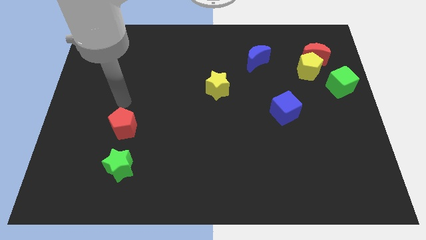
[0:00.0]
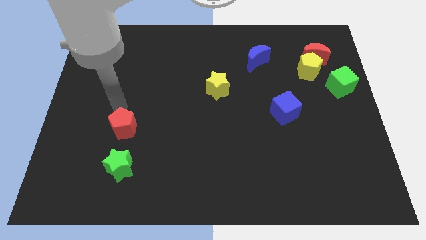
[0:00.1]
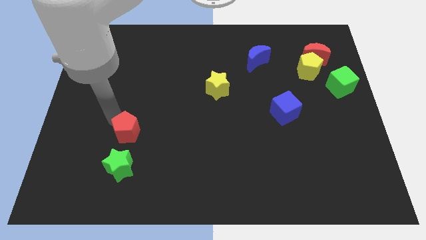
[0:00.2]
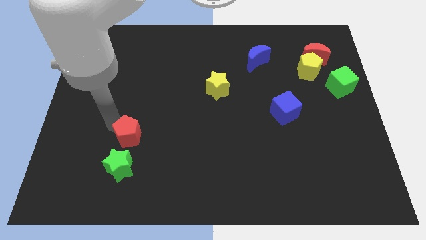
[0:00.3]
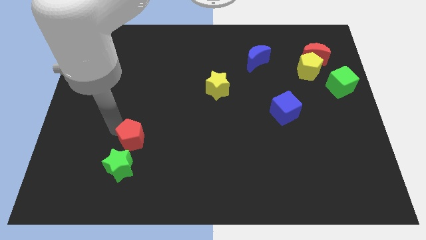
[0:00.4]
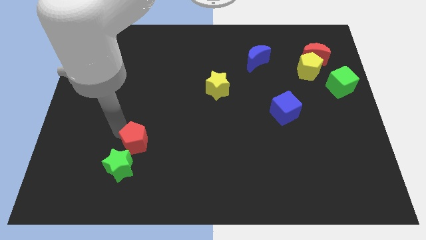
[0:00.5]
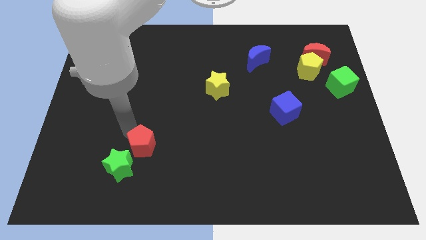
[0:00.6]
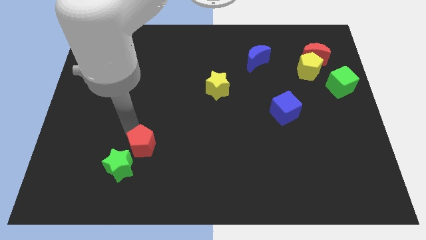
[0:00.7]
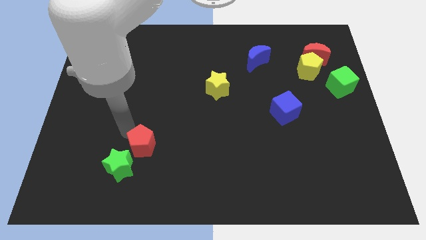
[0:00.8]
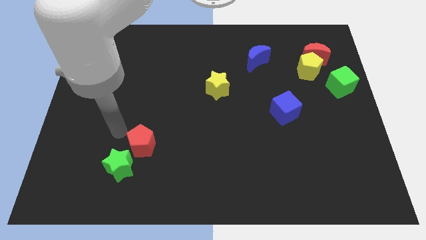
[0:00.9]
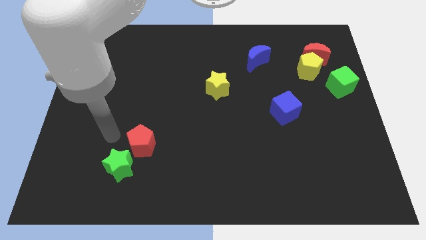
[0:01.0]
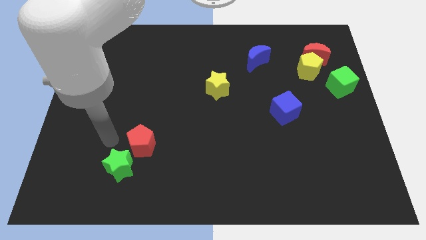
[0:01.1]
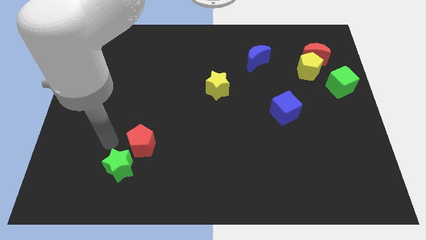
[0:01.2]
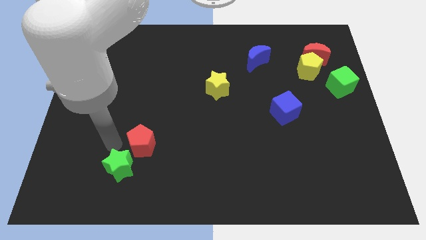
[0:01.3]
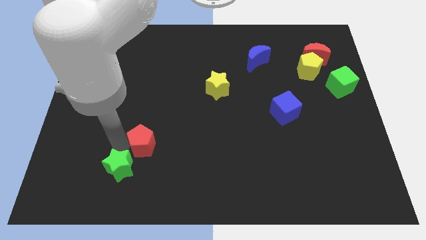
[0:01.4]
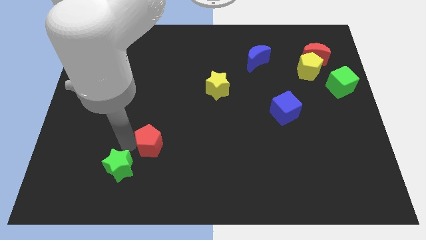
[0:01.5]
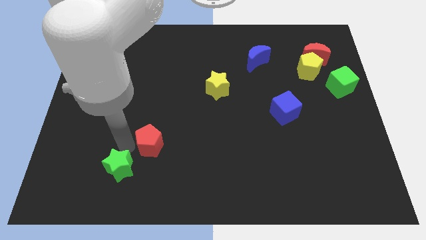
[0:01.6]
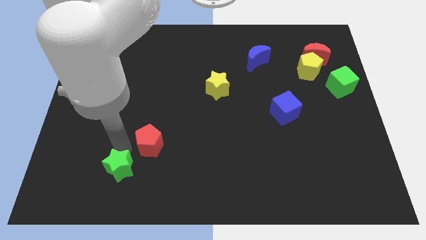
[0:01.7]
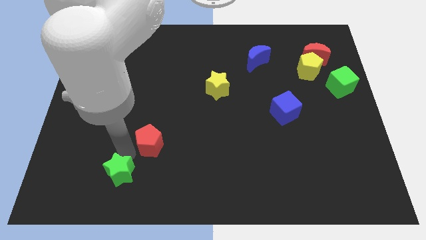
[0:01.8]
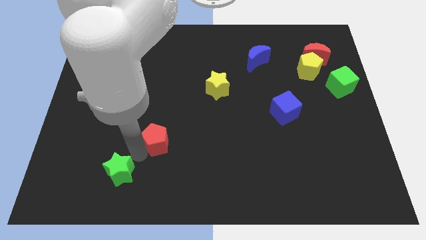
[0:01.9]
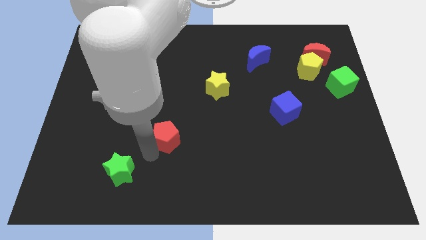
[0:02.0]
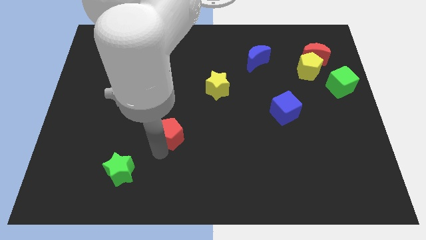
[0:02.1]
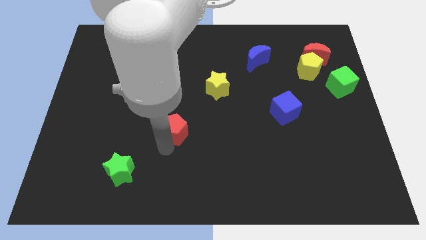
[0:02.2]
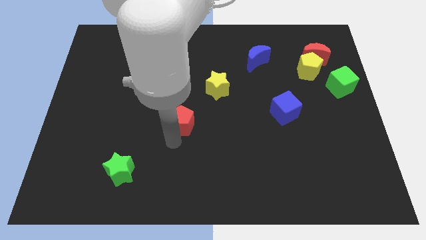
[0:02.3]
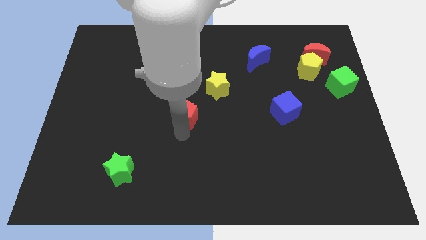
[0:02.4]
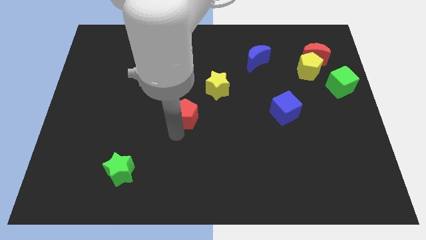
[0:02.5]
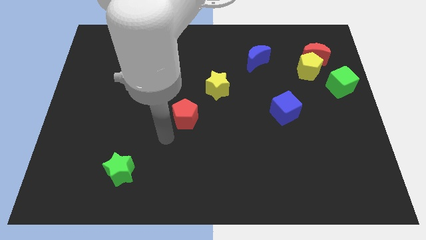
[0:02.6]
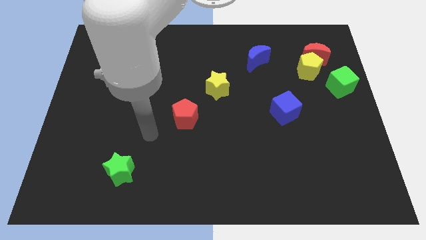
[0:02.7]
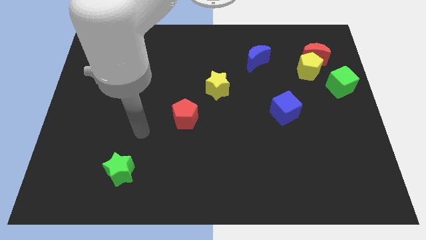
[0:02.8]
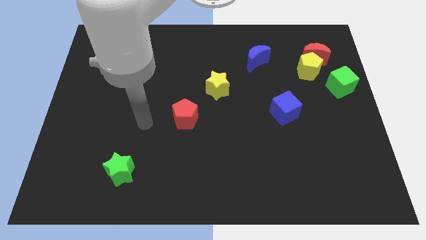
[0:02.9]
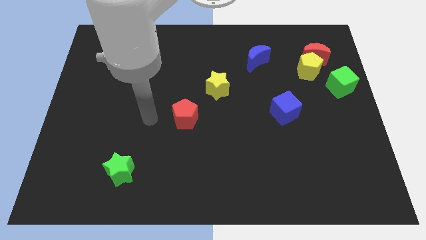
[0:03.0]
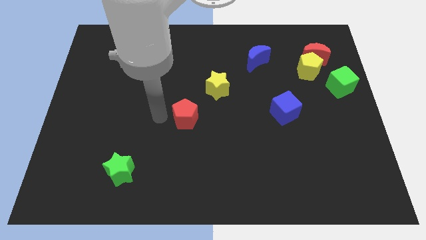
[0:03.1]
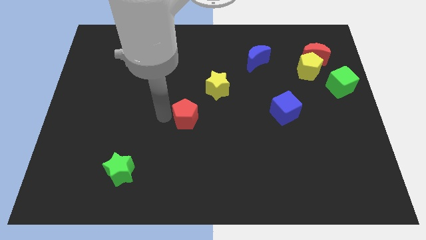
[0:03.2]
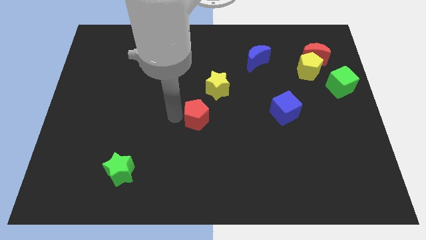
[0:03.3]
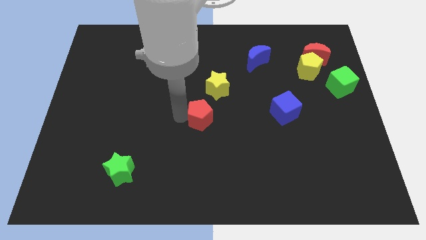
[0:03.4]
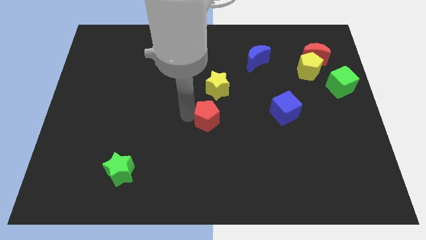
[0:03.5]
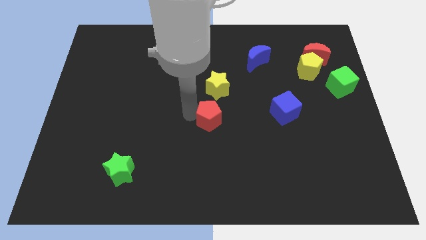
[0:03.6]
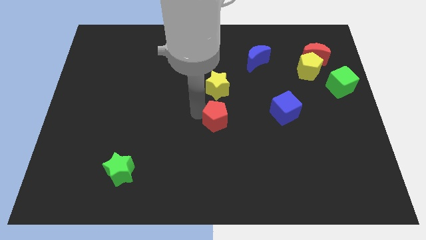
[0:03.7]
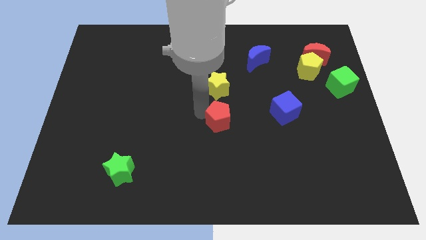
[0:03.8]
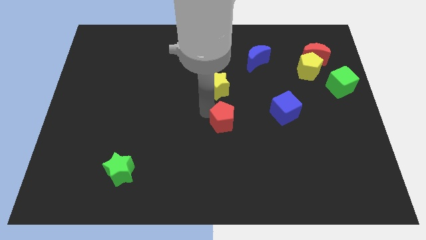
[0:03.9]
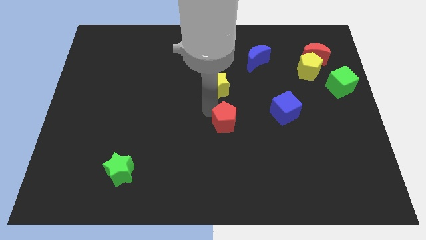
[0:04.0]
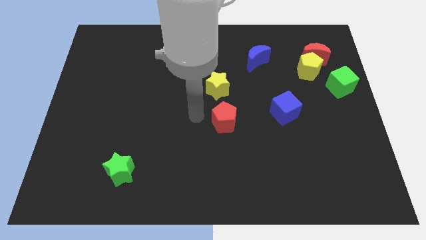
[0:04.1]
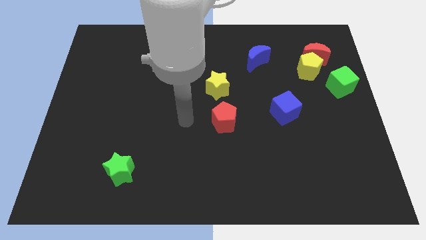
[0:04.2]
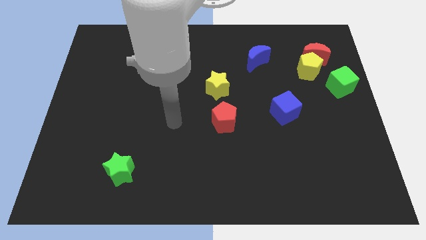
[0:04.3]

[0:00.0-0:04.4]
place the red pentagon below the yellow star

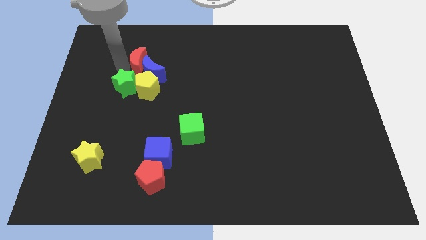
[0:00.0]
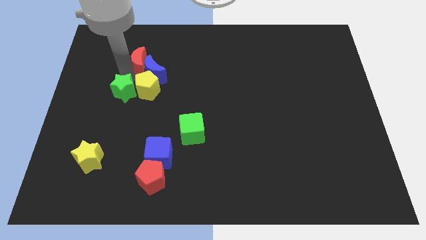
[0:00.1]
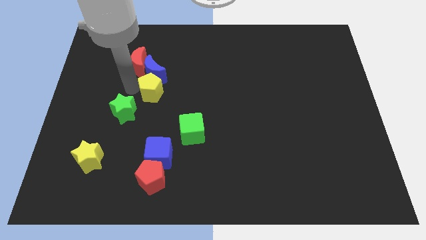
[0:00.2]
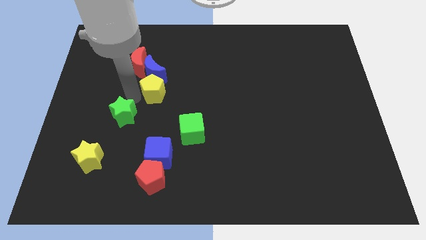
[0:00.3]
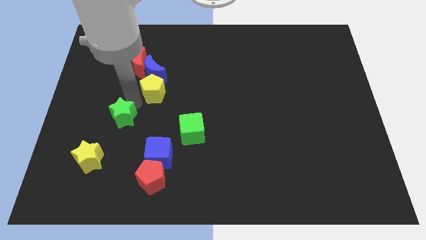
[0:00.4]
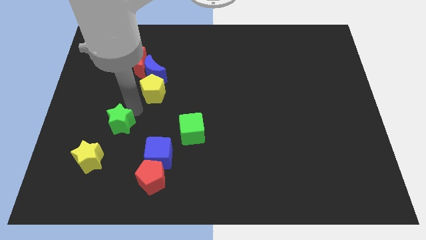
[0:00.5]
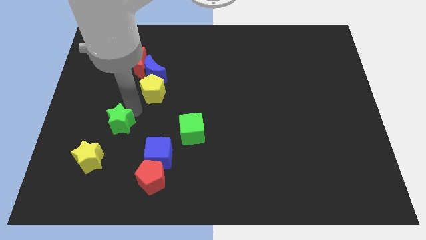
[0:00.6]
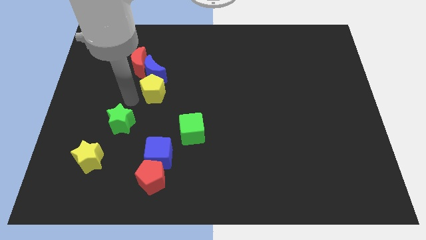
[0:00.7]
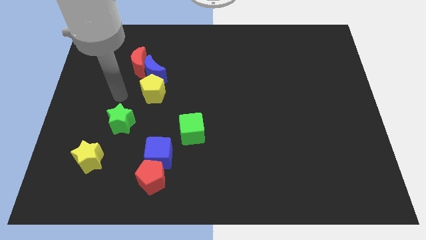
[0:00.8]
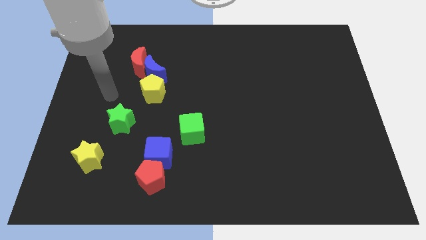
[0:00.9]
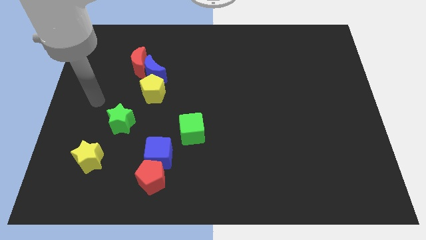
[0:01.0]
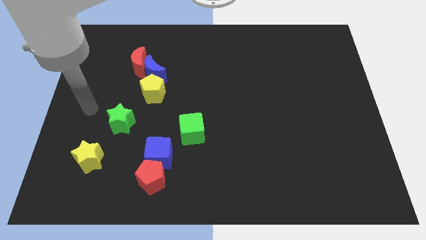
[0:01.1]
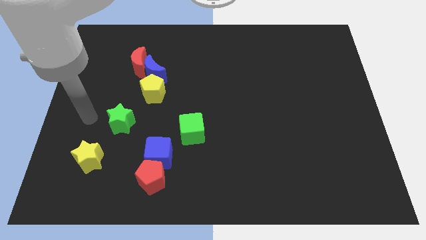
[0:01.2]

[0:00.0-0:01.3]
separate green star and the yellow pentagon

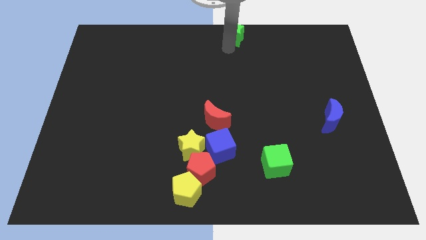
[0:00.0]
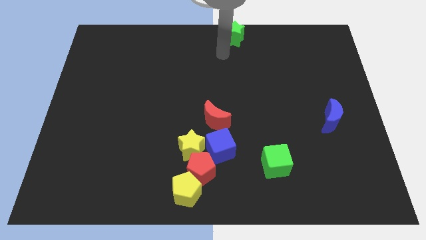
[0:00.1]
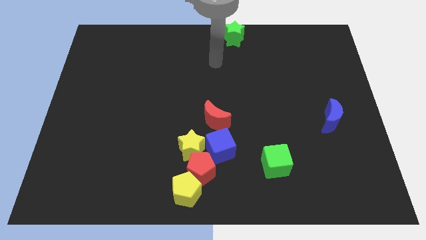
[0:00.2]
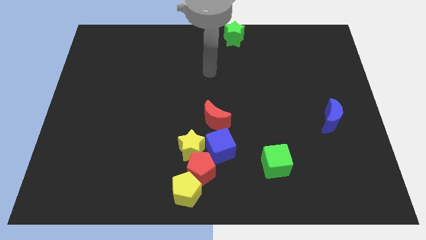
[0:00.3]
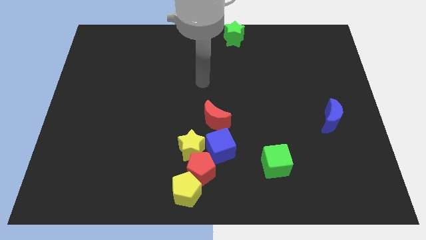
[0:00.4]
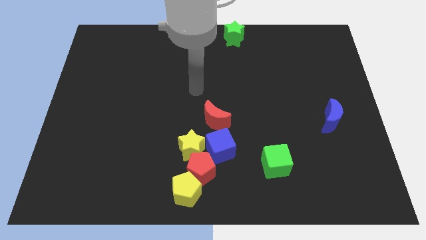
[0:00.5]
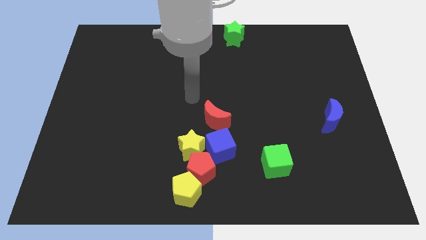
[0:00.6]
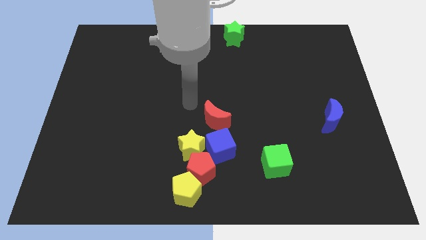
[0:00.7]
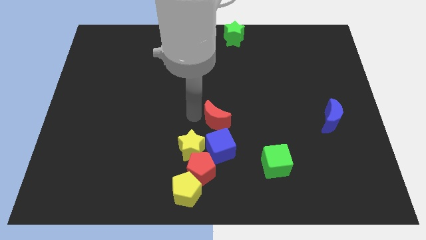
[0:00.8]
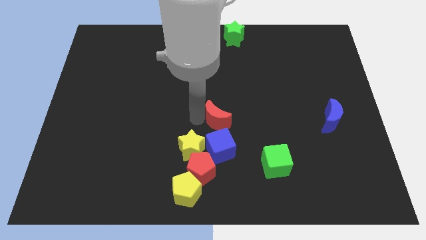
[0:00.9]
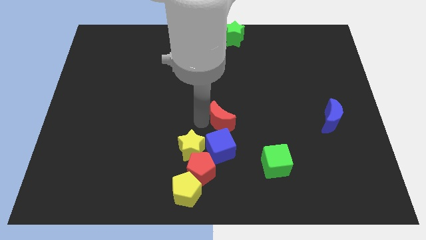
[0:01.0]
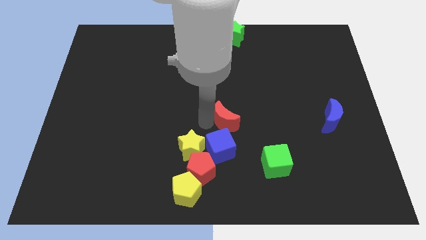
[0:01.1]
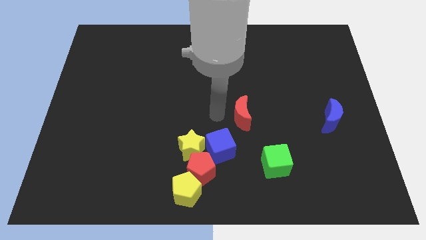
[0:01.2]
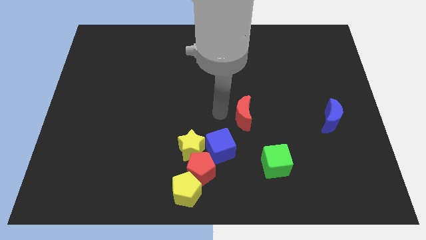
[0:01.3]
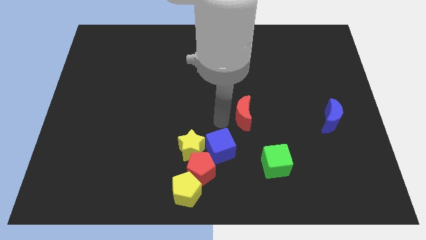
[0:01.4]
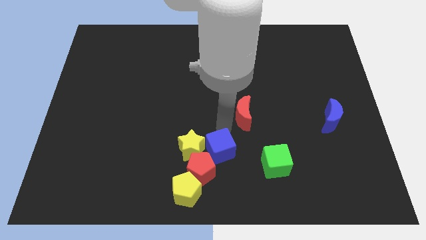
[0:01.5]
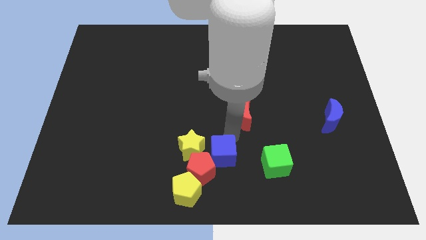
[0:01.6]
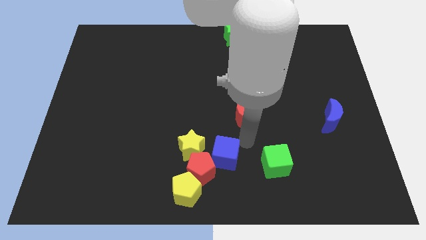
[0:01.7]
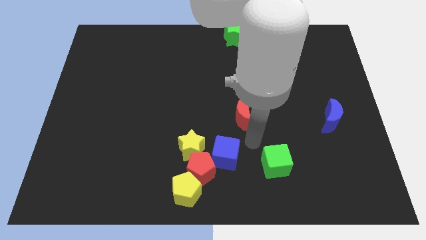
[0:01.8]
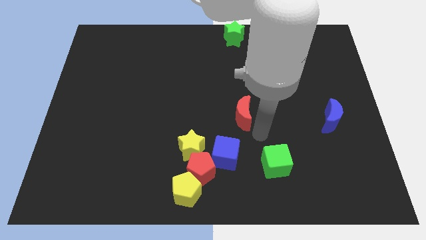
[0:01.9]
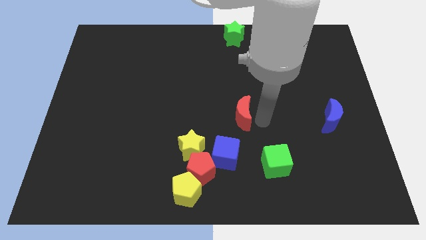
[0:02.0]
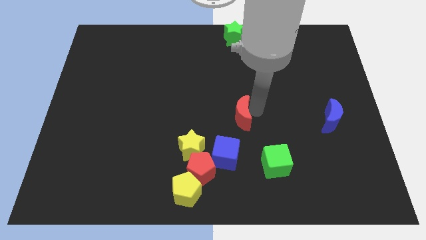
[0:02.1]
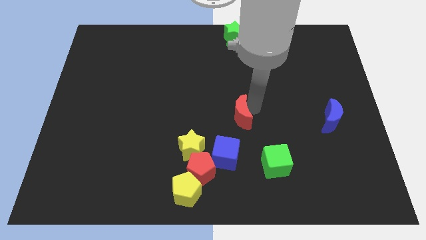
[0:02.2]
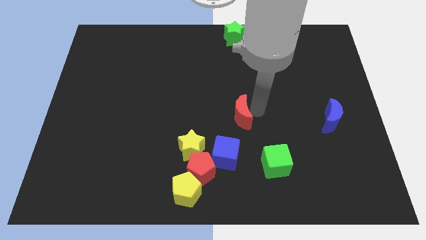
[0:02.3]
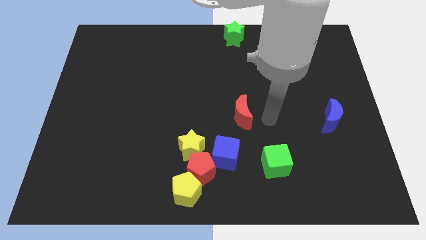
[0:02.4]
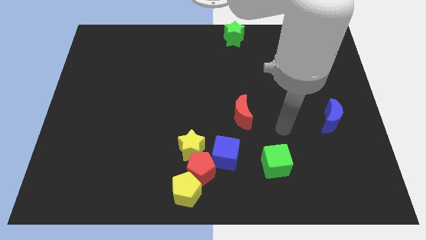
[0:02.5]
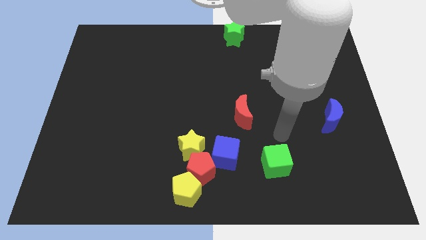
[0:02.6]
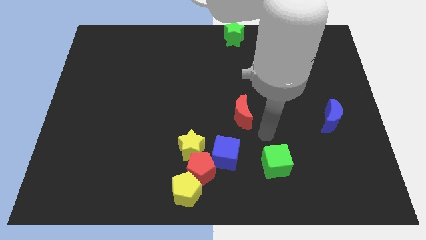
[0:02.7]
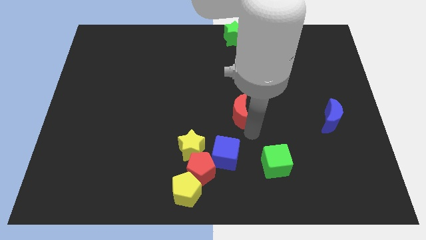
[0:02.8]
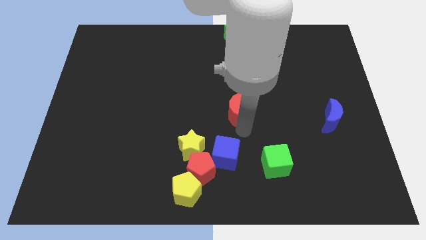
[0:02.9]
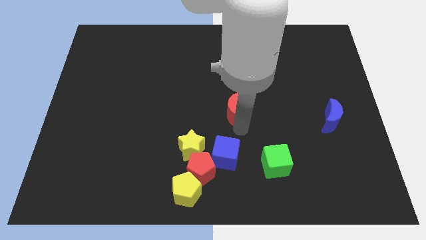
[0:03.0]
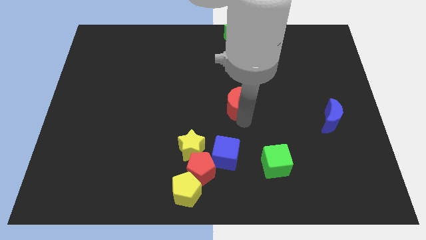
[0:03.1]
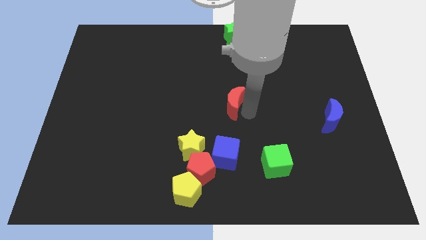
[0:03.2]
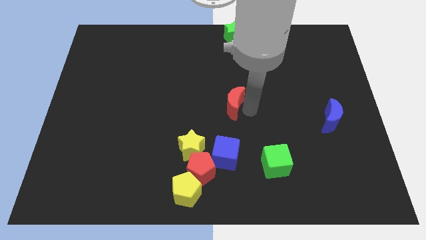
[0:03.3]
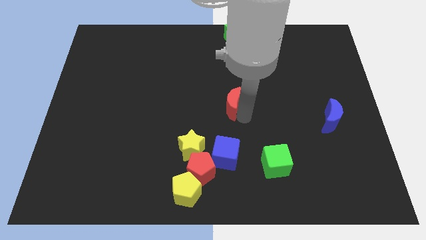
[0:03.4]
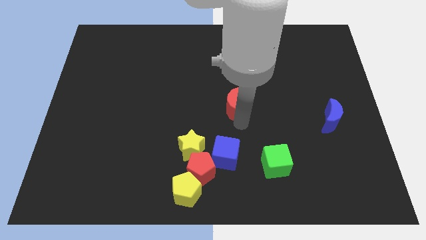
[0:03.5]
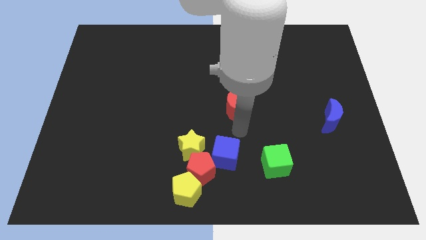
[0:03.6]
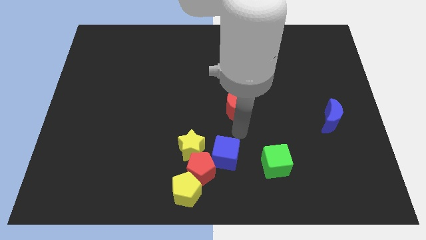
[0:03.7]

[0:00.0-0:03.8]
push the red crescent to the top of the blue cube
